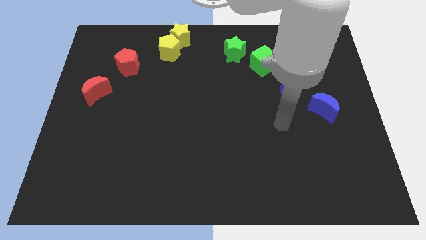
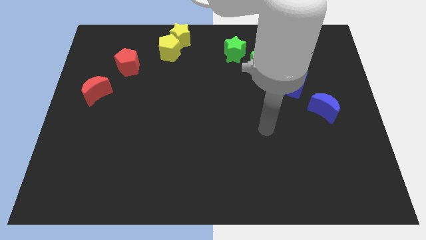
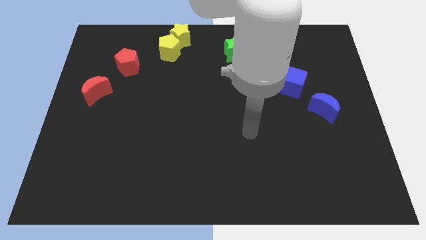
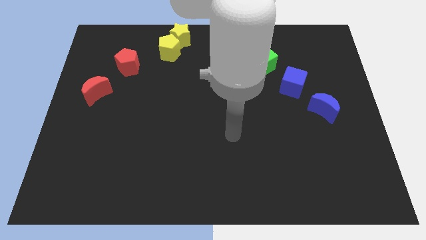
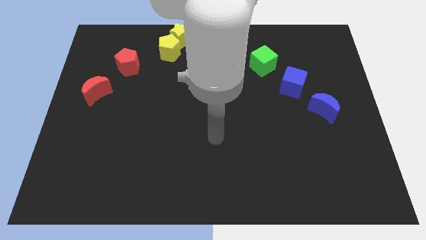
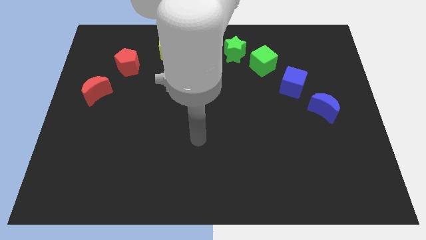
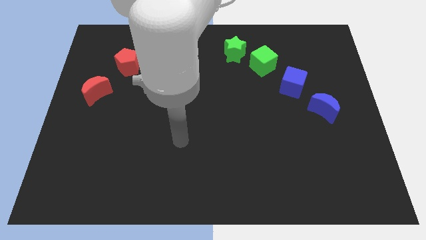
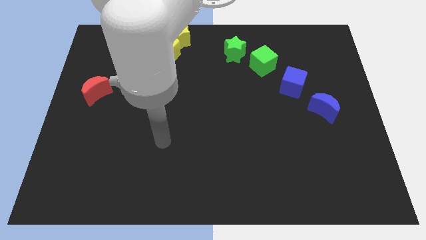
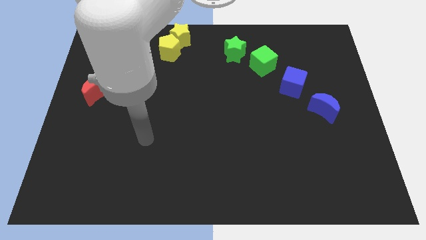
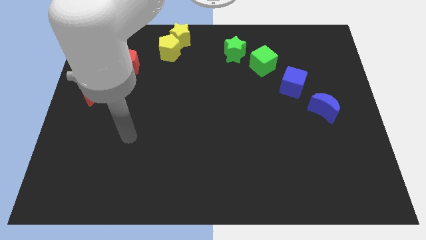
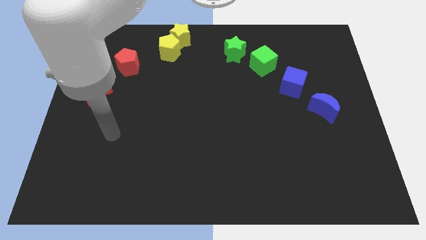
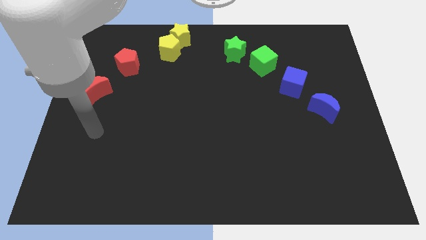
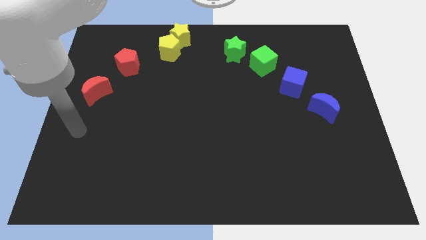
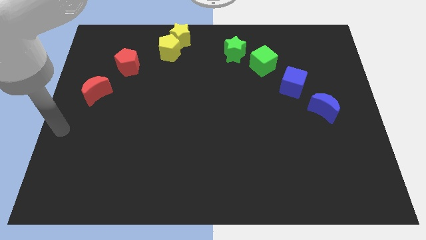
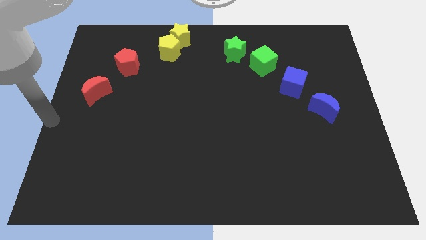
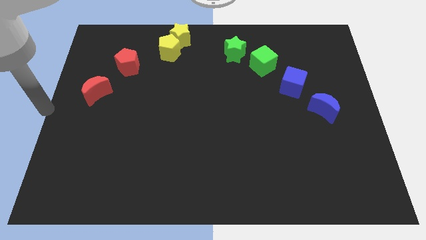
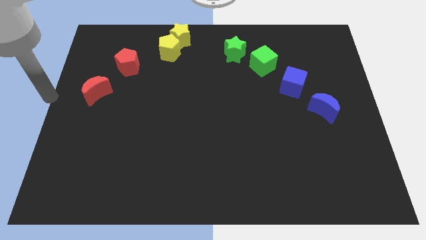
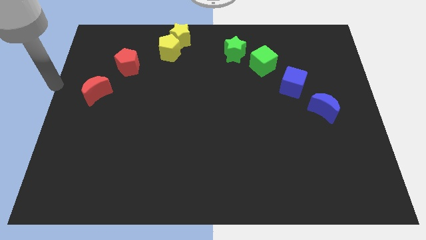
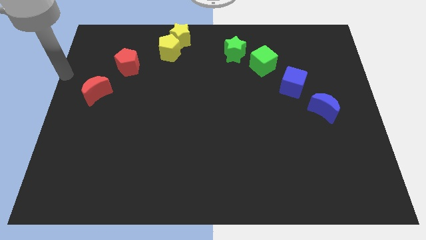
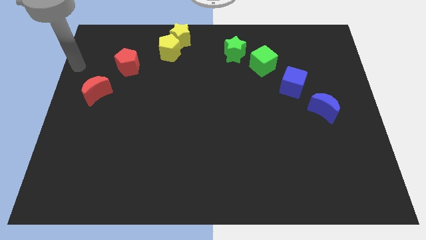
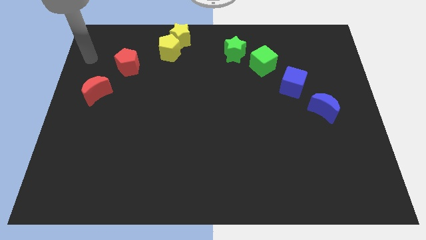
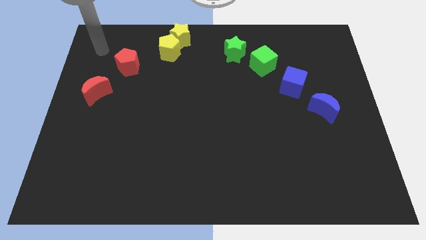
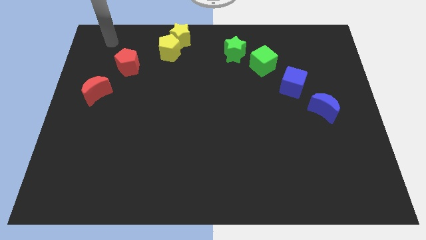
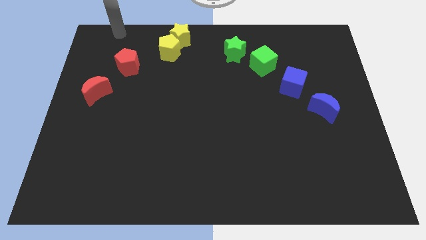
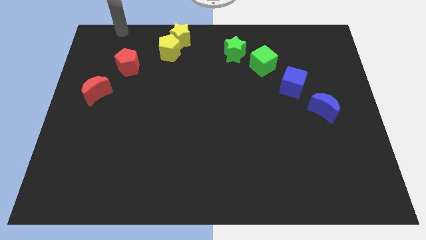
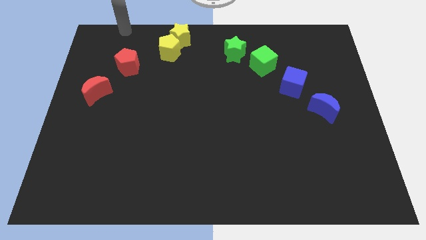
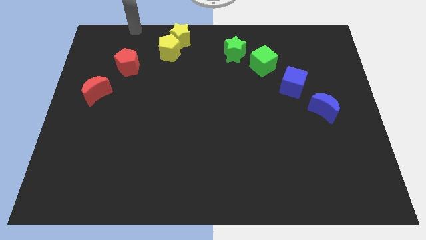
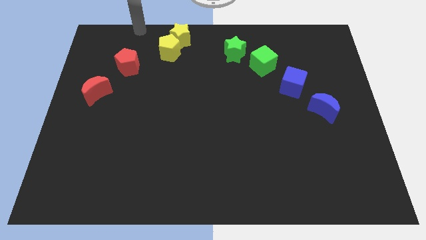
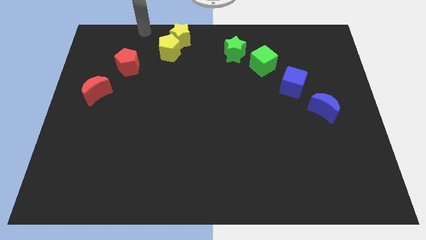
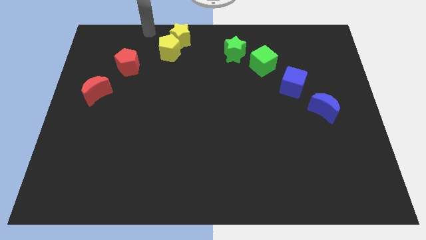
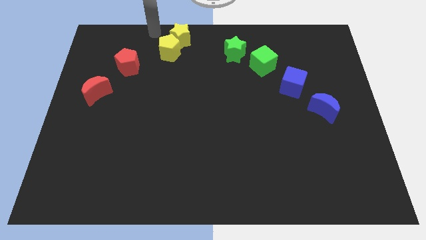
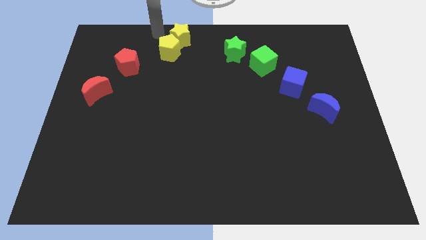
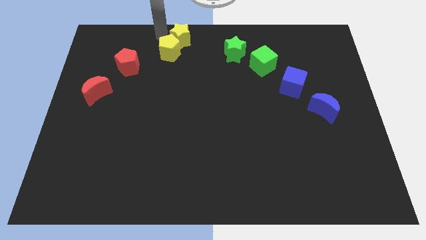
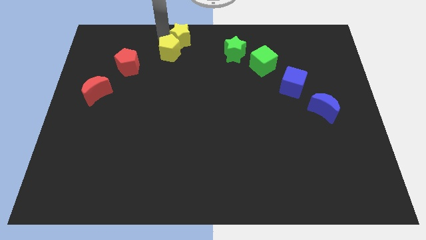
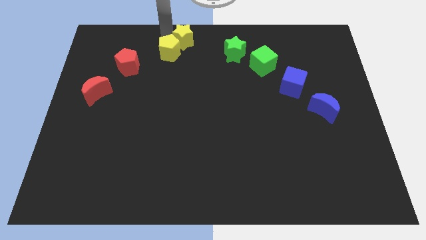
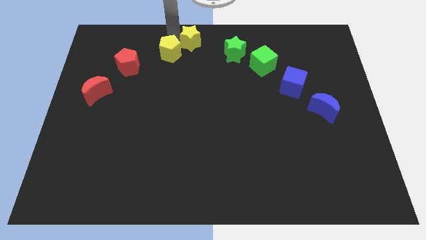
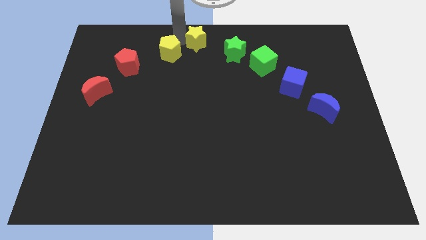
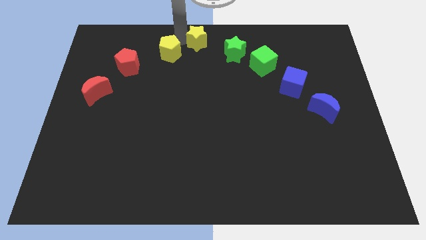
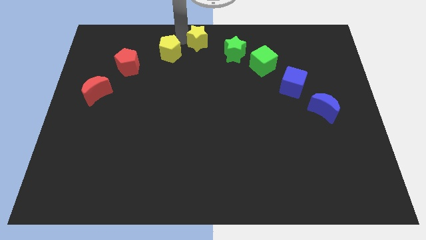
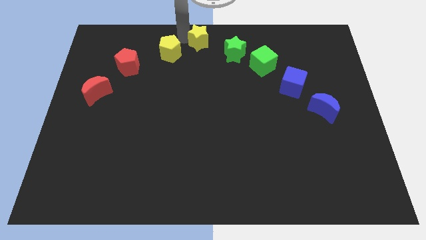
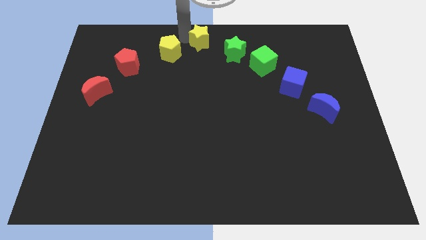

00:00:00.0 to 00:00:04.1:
slightly push the yellow star to the left of green star

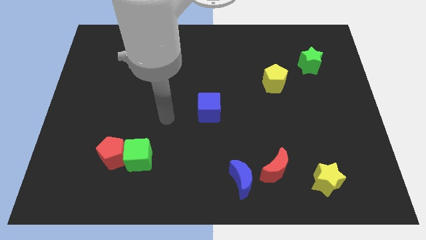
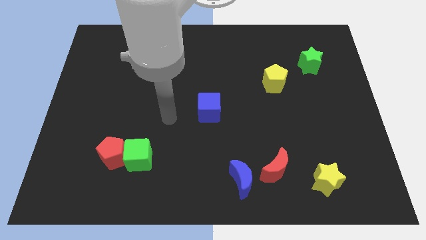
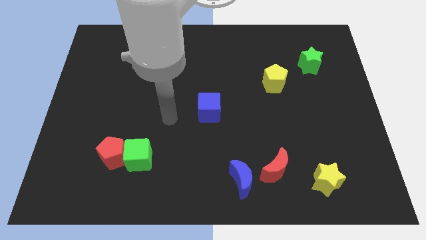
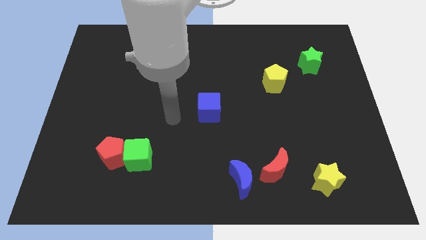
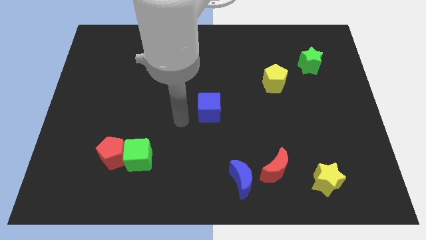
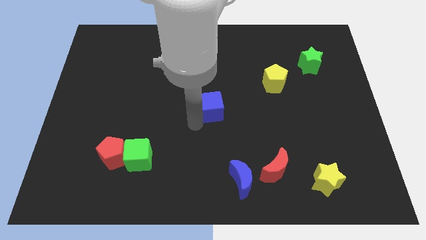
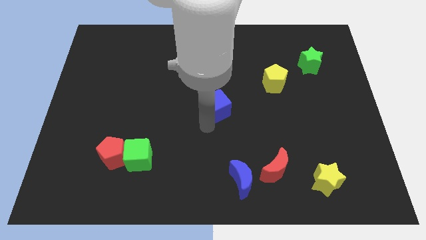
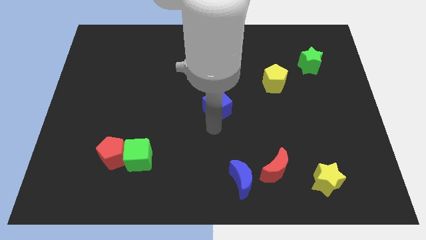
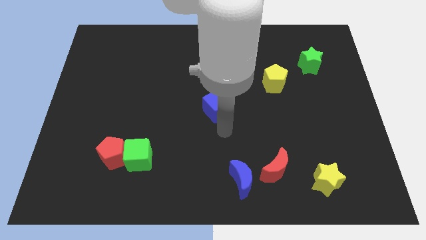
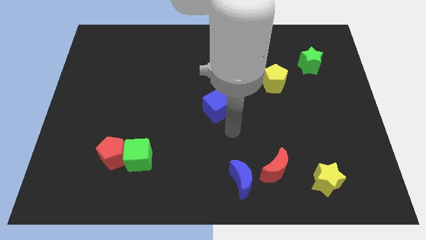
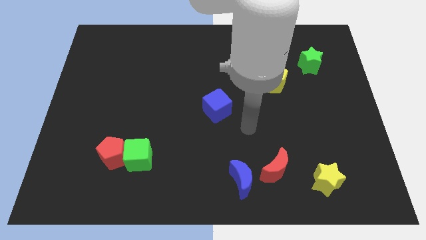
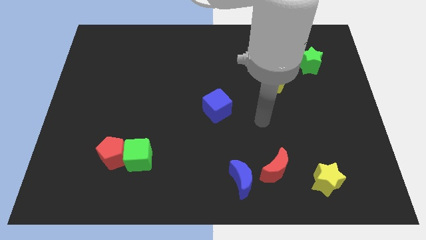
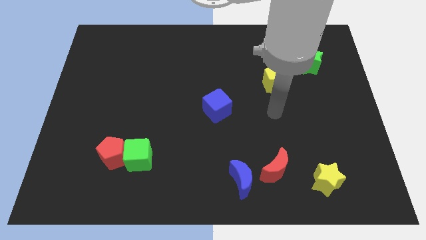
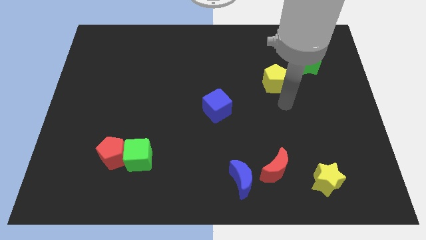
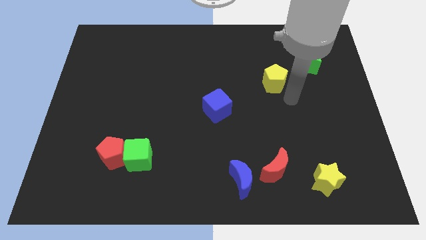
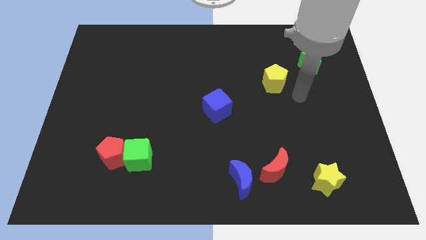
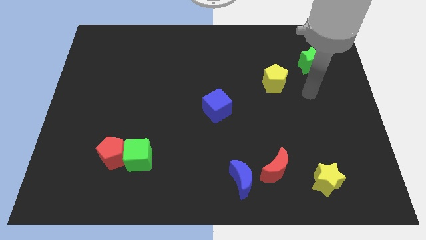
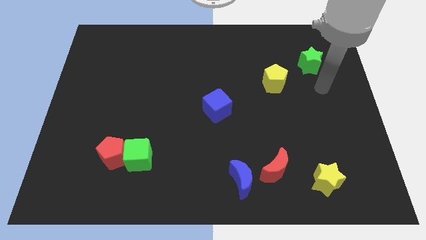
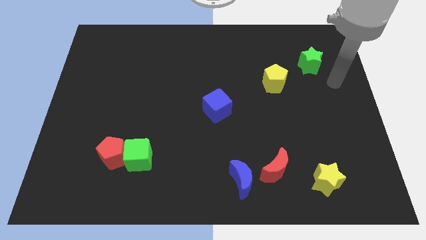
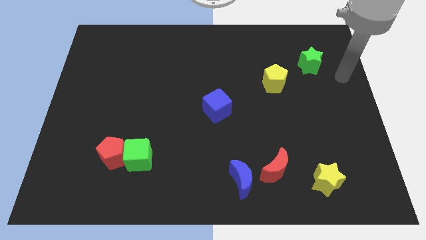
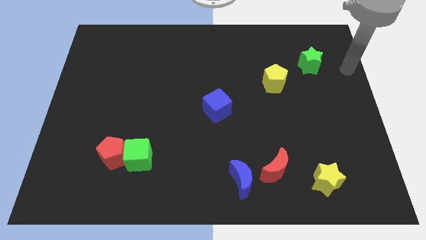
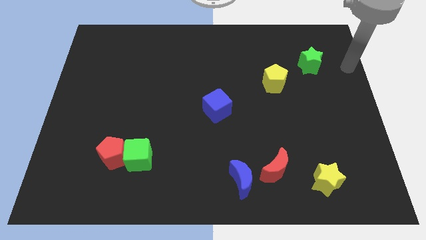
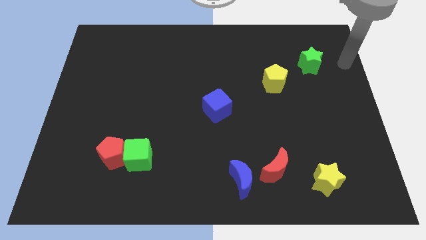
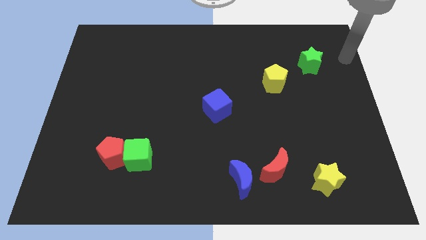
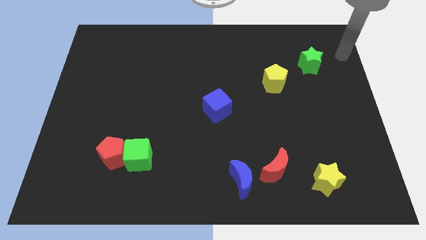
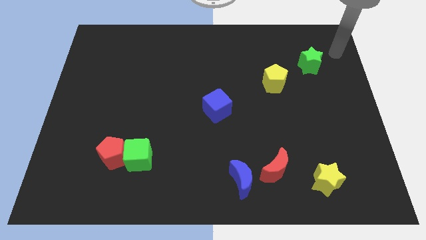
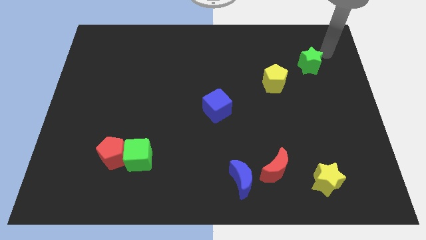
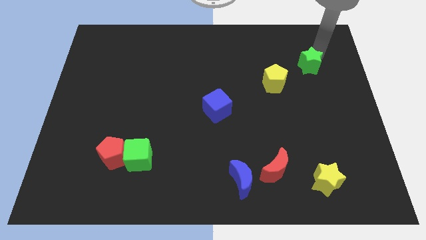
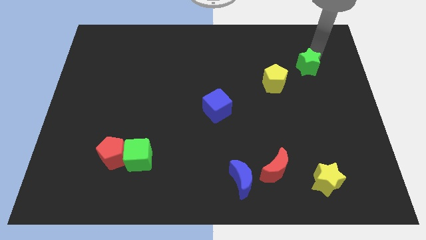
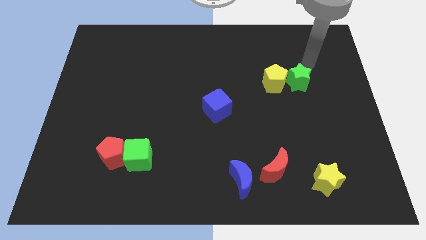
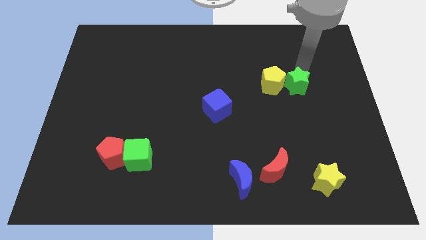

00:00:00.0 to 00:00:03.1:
place the green star on right side of yellow pentagon

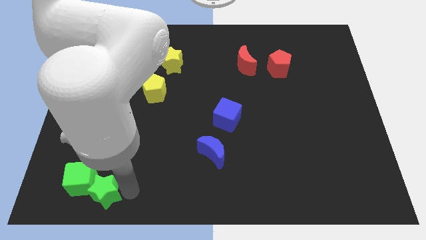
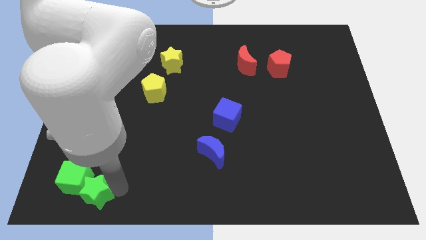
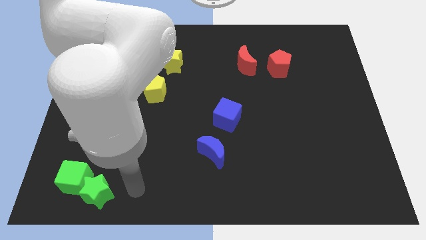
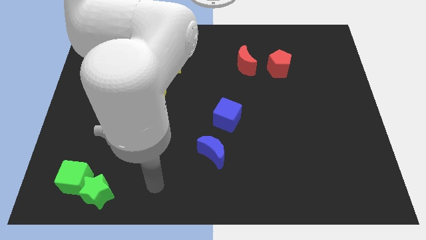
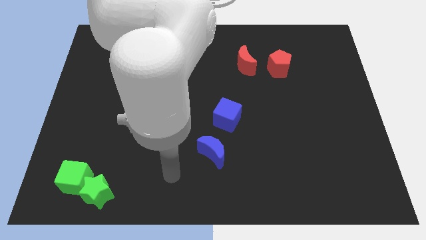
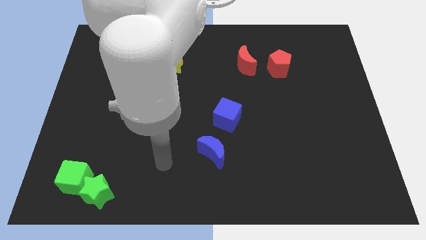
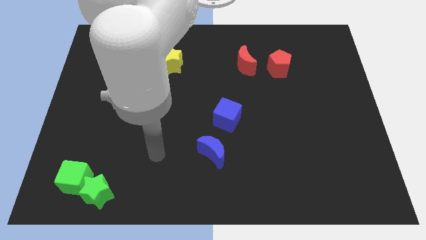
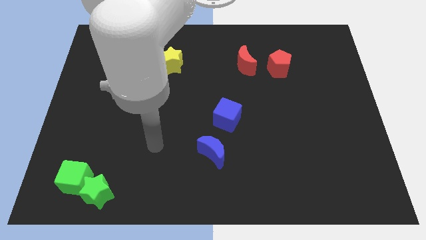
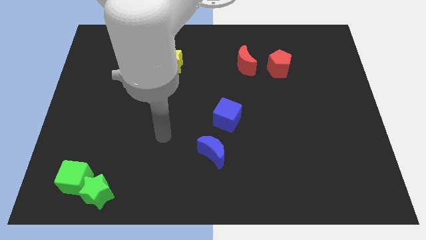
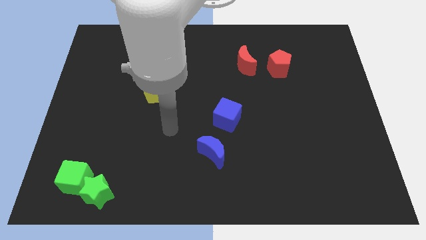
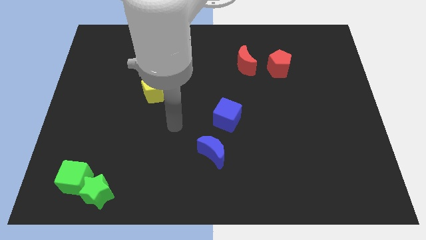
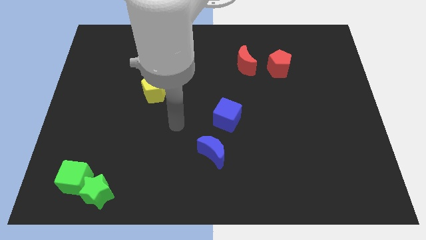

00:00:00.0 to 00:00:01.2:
move your arm away from green star

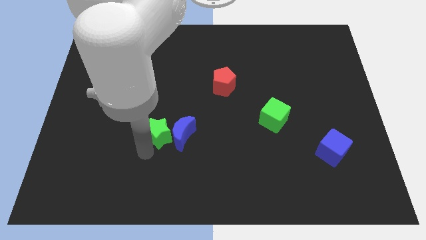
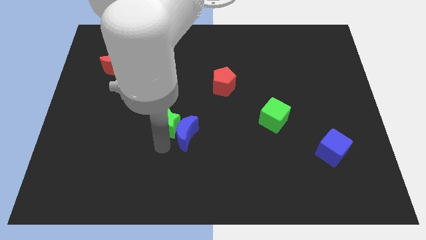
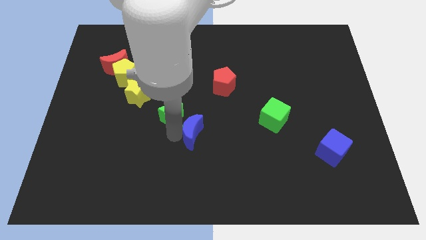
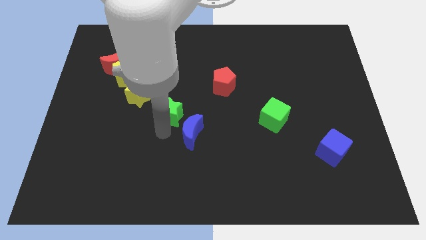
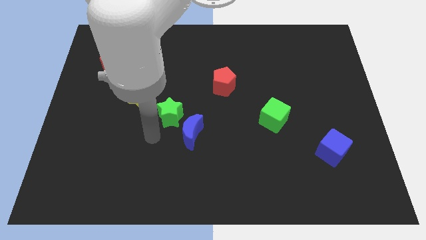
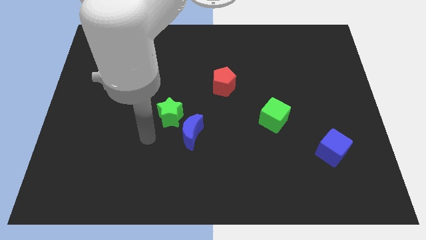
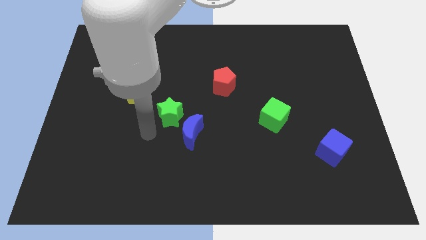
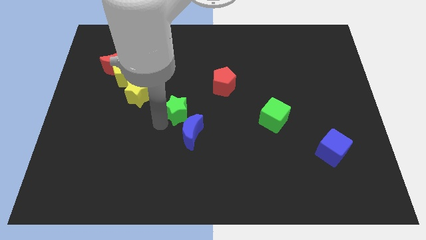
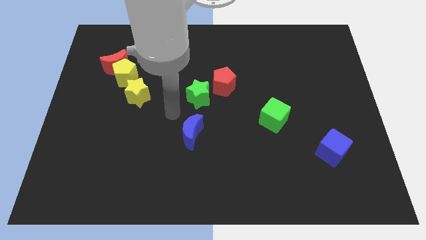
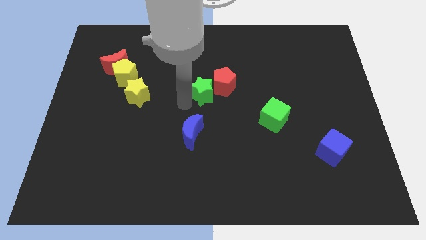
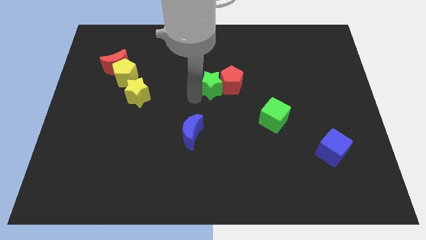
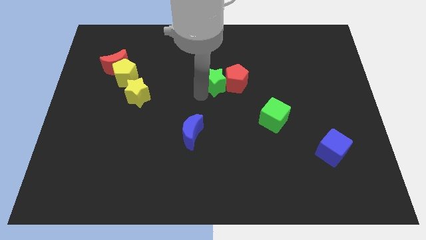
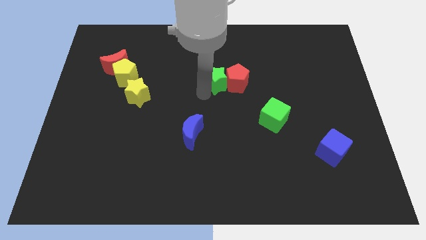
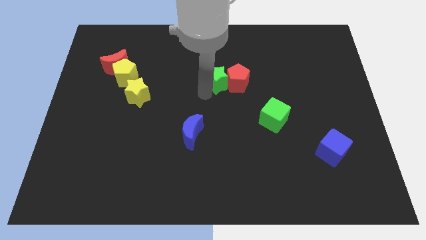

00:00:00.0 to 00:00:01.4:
move the green star to the left of the red penatgon
